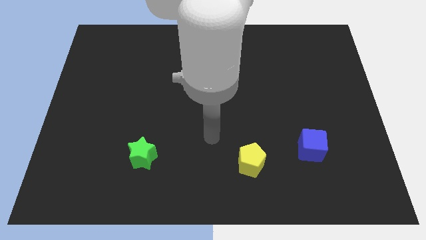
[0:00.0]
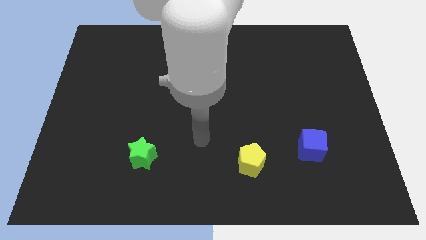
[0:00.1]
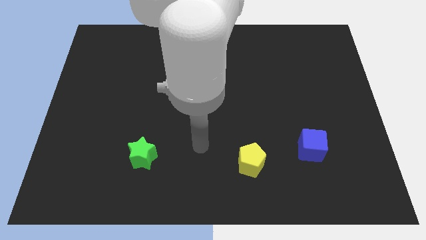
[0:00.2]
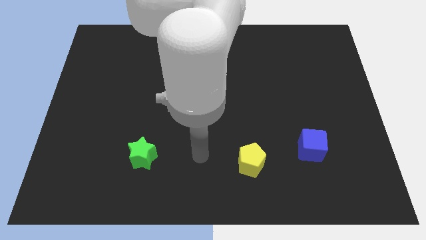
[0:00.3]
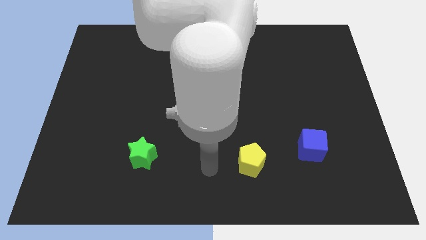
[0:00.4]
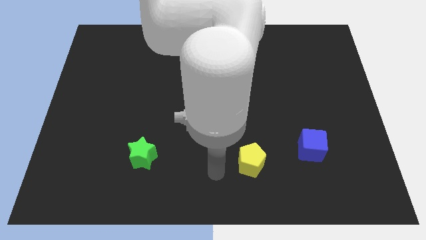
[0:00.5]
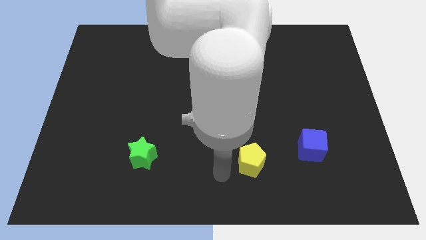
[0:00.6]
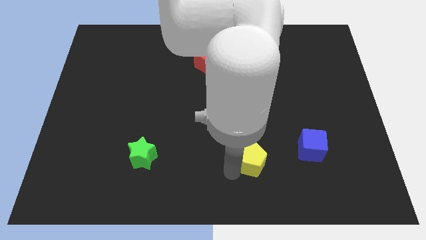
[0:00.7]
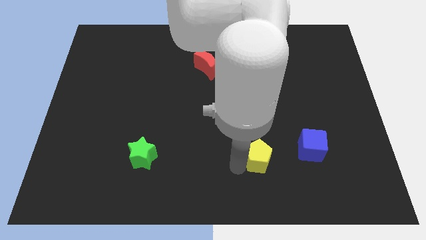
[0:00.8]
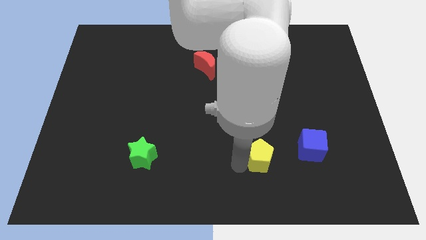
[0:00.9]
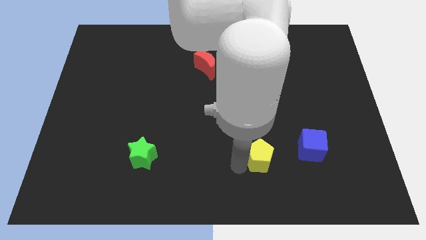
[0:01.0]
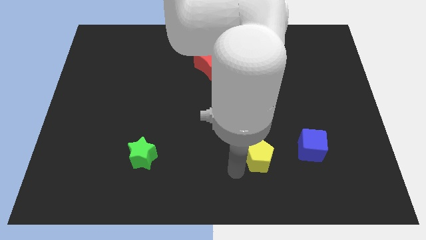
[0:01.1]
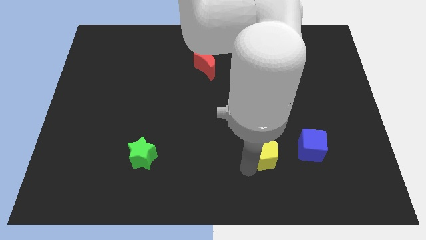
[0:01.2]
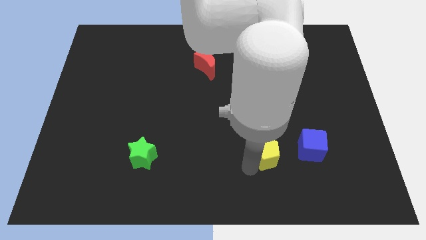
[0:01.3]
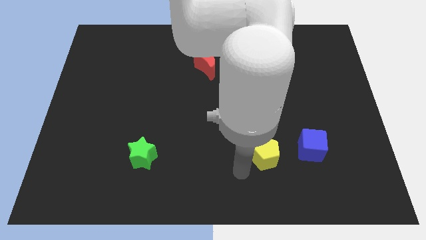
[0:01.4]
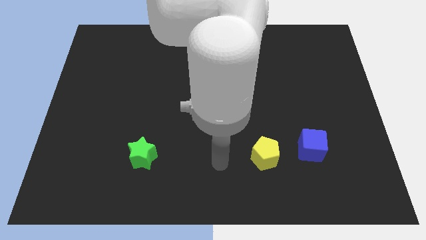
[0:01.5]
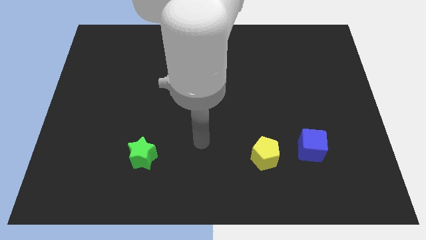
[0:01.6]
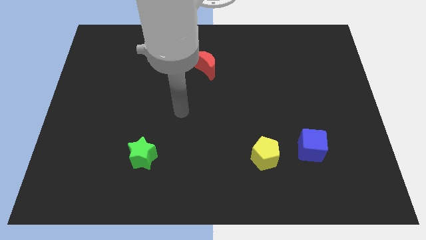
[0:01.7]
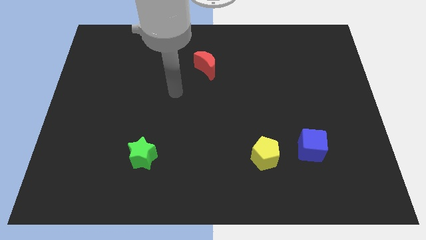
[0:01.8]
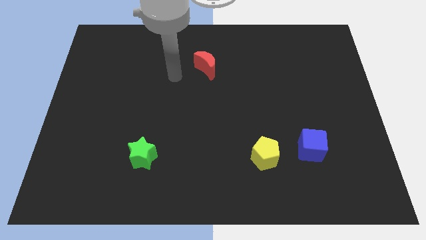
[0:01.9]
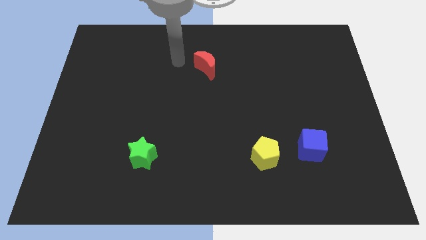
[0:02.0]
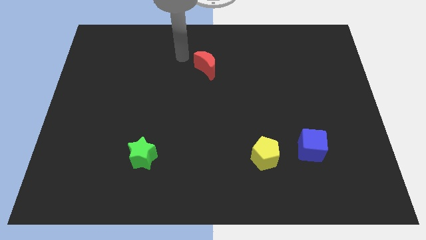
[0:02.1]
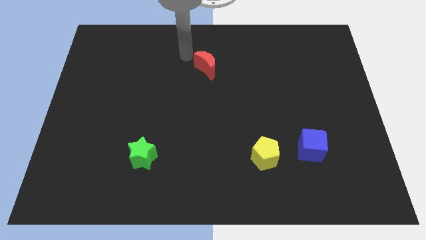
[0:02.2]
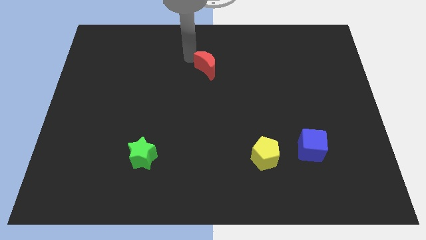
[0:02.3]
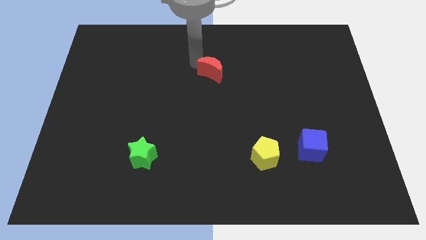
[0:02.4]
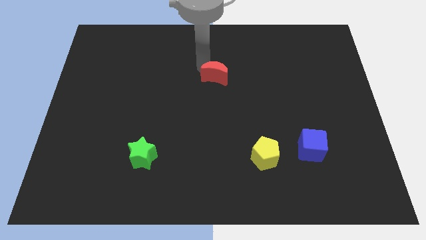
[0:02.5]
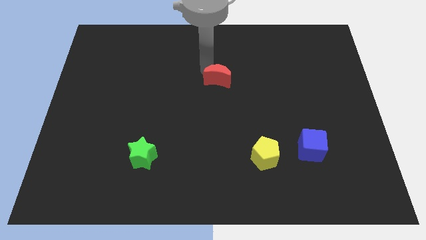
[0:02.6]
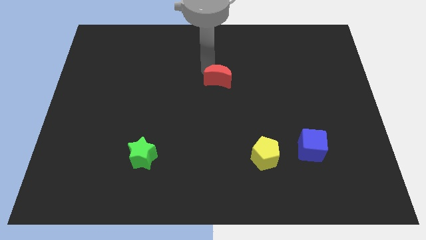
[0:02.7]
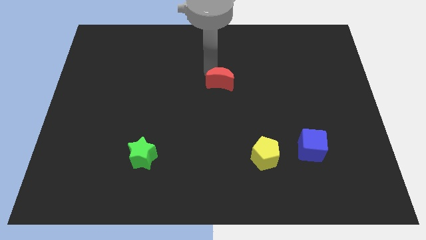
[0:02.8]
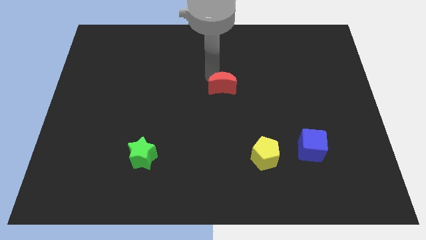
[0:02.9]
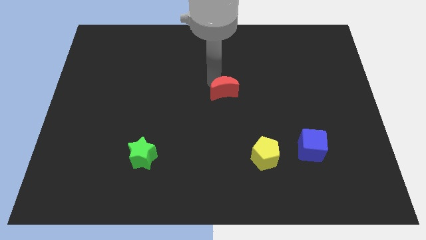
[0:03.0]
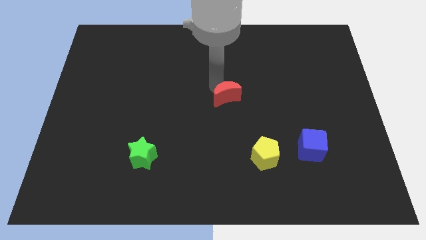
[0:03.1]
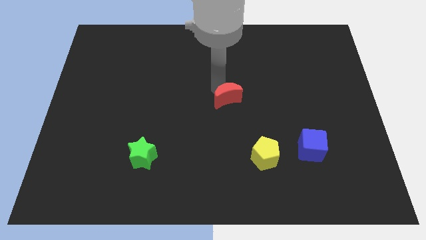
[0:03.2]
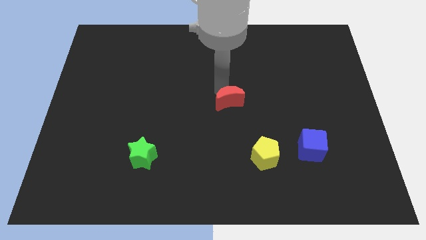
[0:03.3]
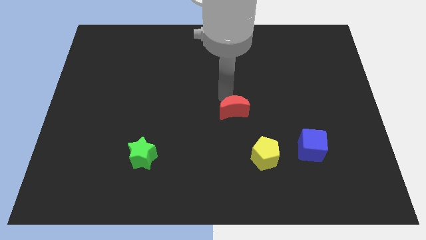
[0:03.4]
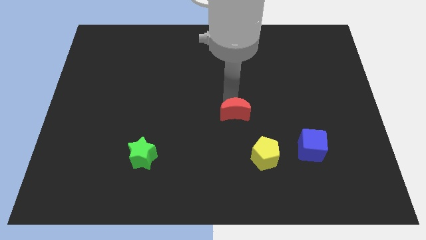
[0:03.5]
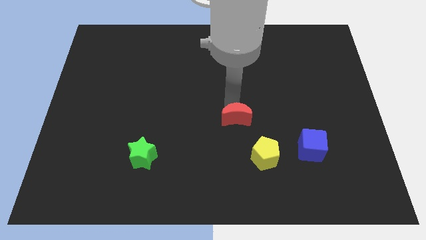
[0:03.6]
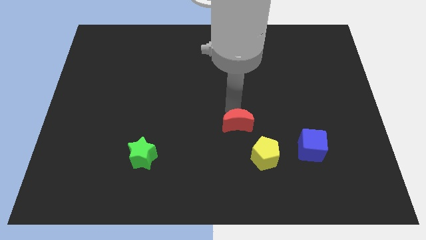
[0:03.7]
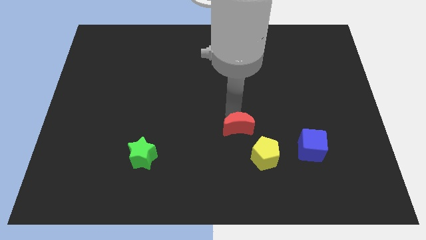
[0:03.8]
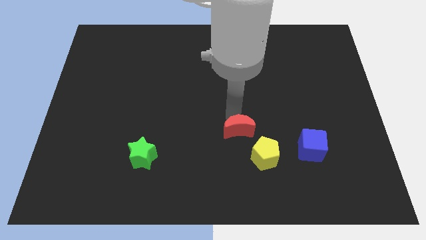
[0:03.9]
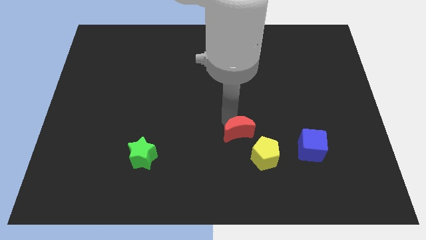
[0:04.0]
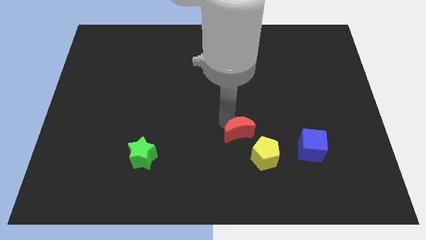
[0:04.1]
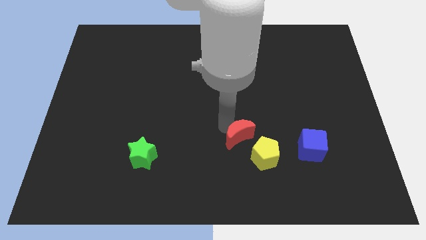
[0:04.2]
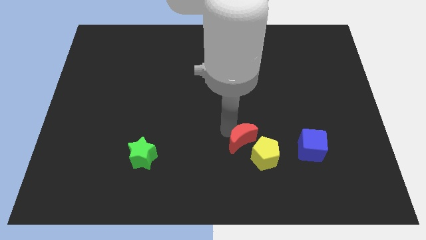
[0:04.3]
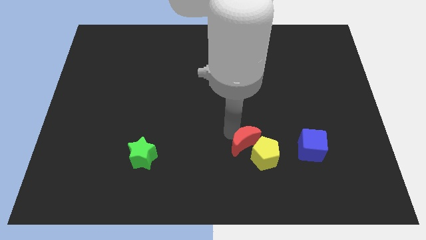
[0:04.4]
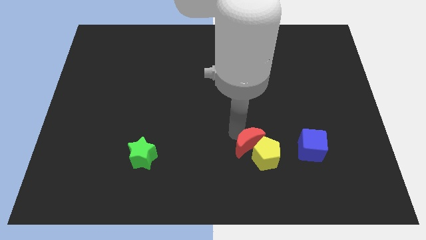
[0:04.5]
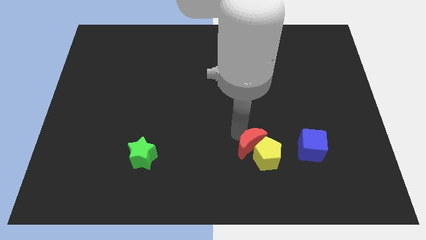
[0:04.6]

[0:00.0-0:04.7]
move the red block towards the yellow pentagon

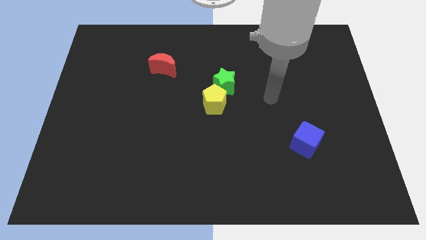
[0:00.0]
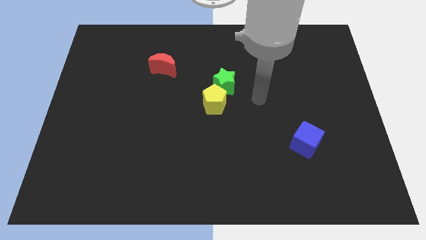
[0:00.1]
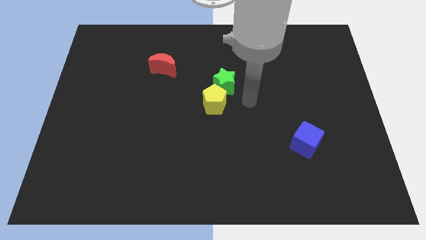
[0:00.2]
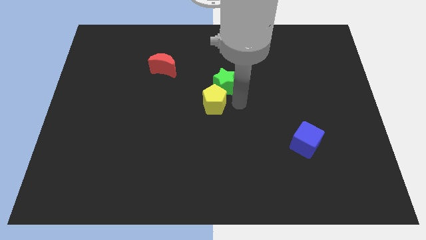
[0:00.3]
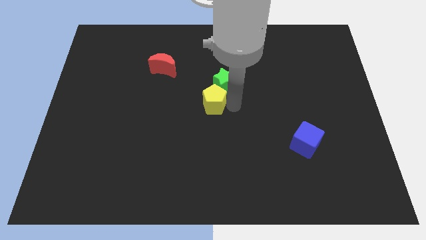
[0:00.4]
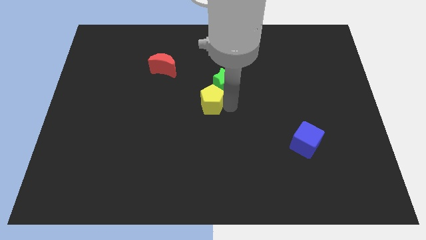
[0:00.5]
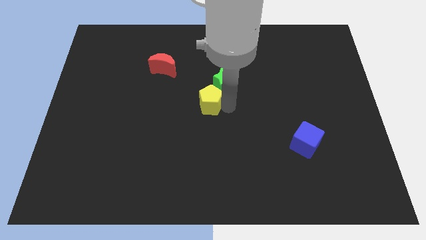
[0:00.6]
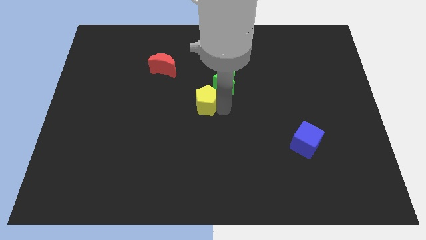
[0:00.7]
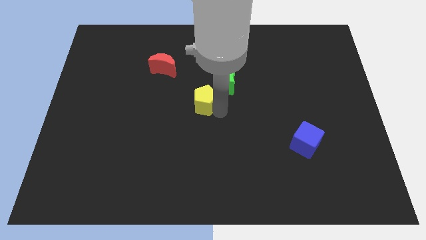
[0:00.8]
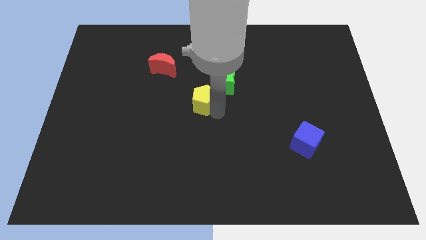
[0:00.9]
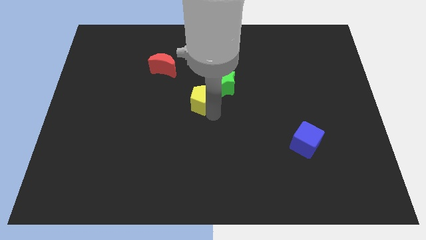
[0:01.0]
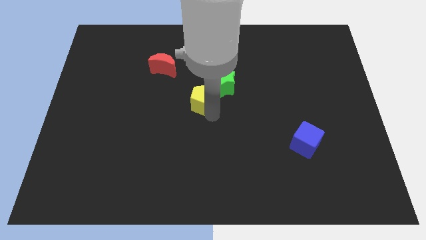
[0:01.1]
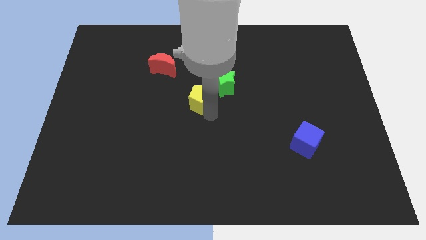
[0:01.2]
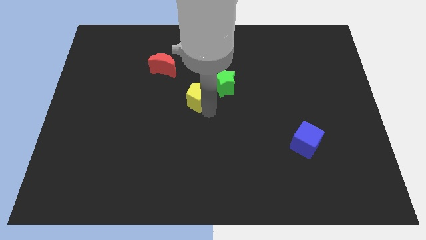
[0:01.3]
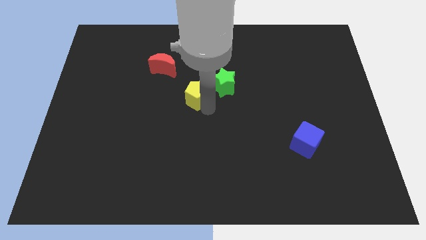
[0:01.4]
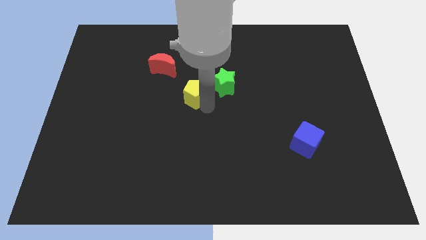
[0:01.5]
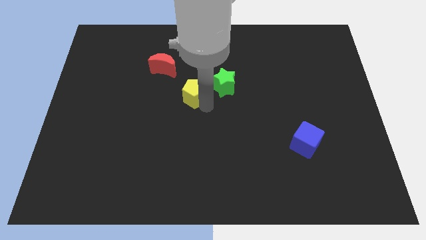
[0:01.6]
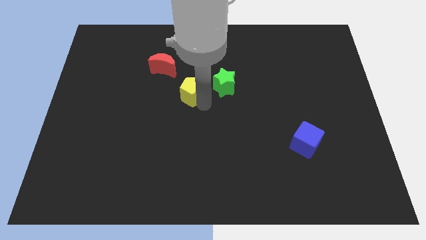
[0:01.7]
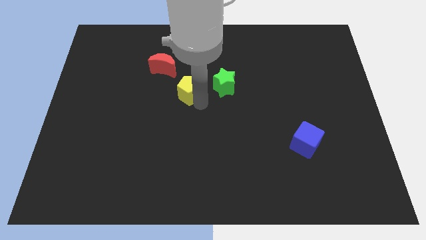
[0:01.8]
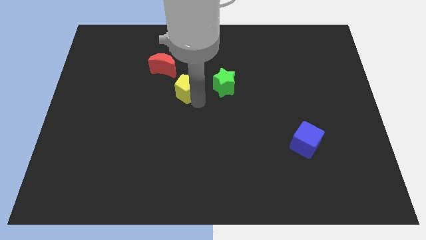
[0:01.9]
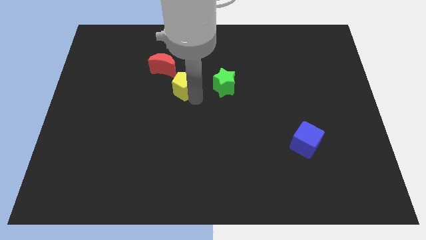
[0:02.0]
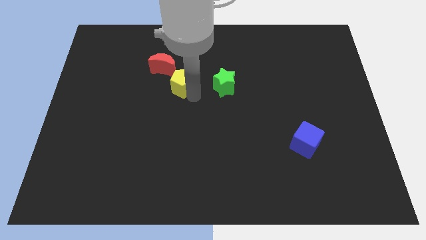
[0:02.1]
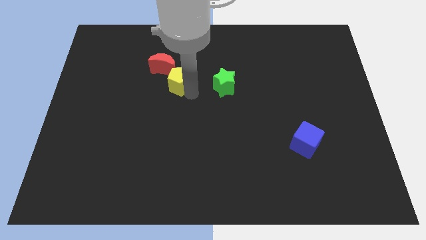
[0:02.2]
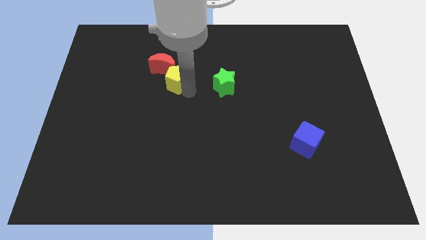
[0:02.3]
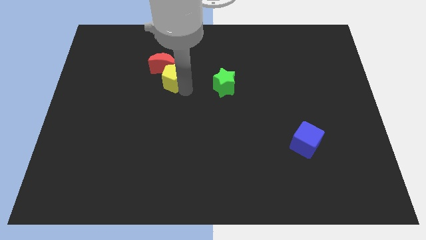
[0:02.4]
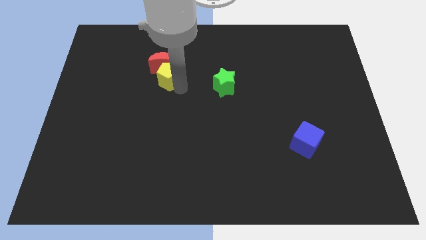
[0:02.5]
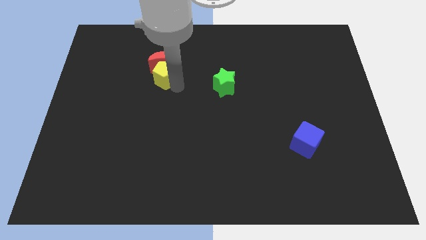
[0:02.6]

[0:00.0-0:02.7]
push the yellow block to the red moon

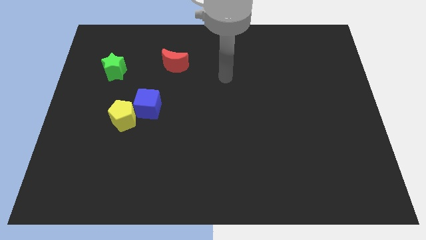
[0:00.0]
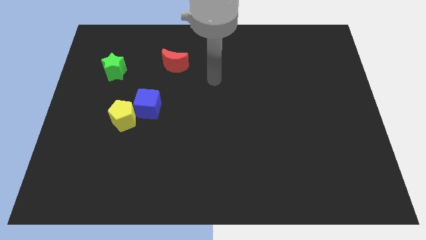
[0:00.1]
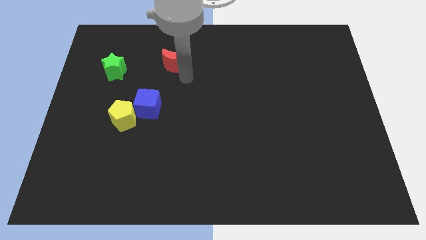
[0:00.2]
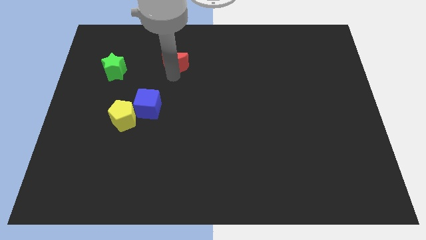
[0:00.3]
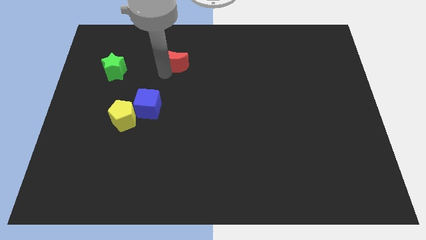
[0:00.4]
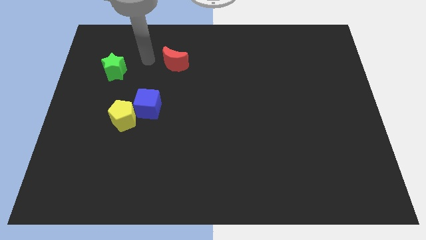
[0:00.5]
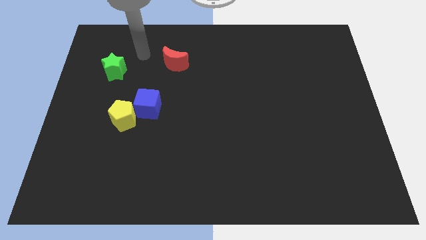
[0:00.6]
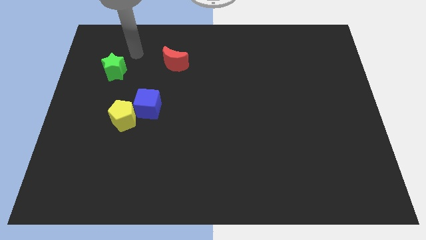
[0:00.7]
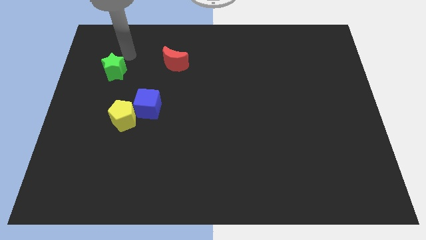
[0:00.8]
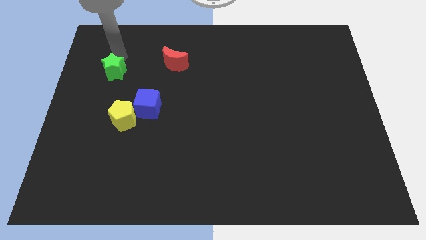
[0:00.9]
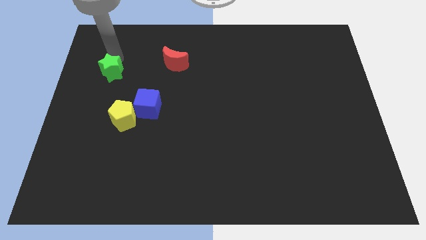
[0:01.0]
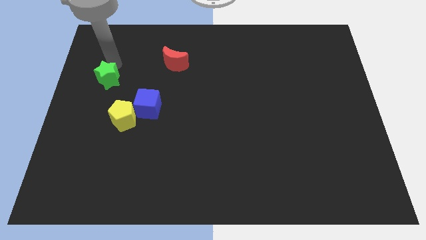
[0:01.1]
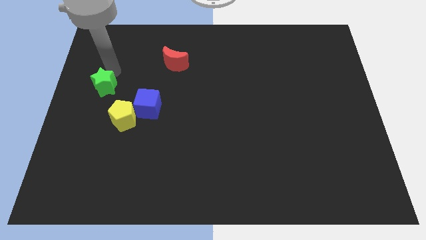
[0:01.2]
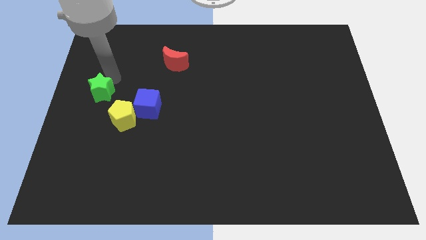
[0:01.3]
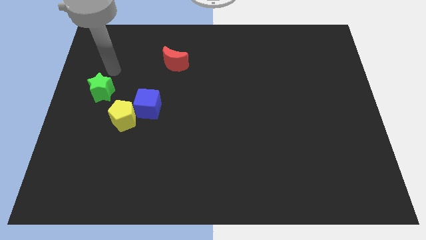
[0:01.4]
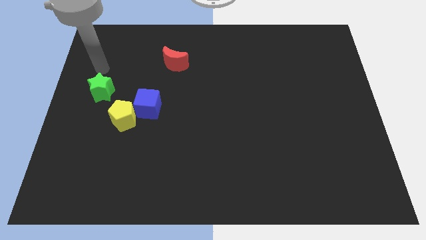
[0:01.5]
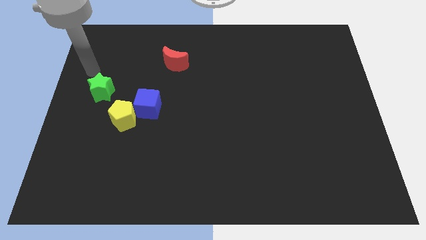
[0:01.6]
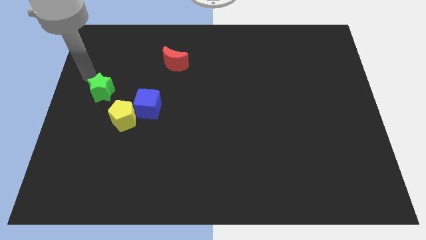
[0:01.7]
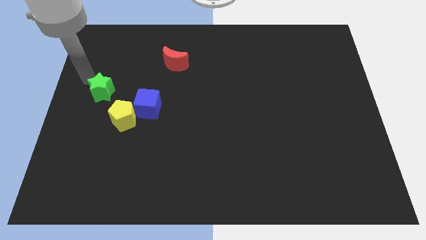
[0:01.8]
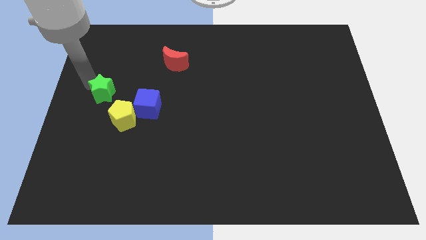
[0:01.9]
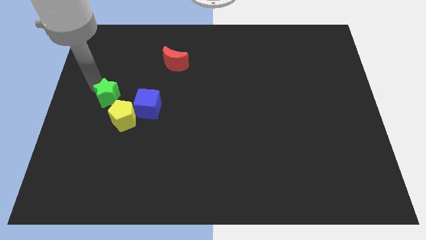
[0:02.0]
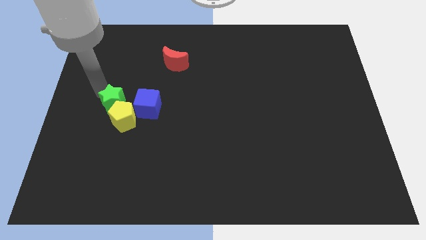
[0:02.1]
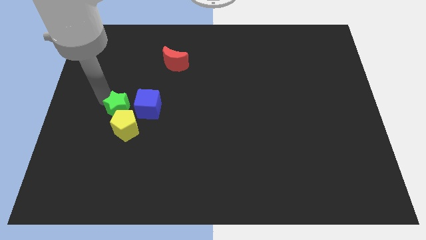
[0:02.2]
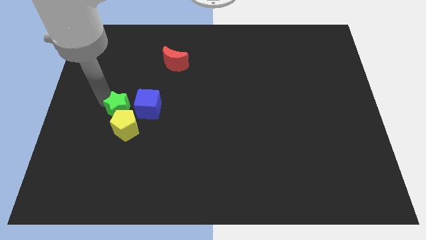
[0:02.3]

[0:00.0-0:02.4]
push the green block close to the pentagon
